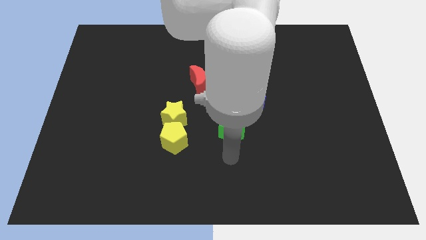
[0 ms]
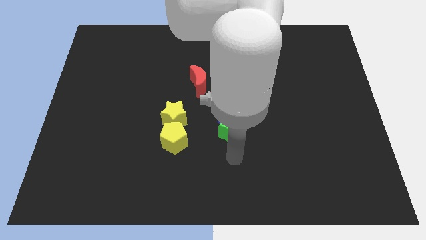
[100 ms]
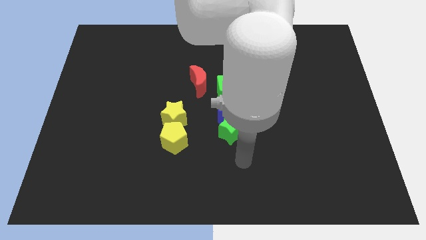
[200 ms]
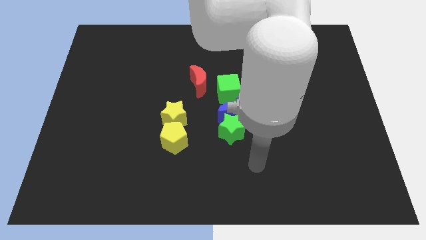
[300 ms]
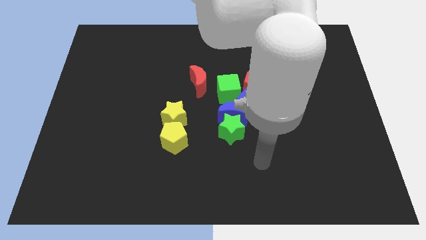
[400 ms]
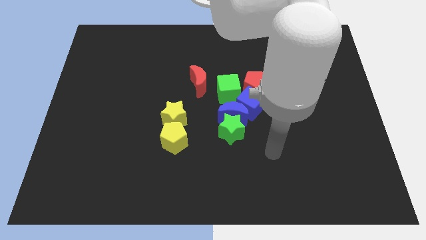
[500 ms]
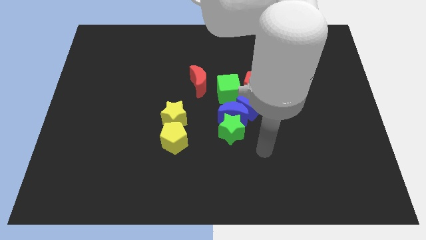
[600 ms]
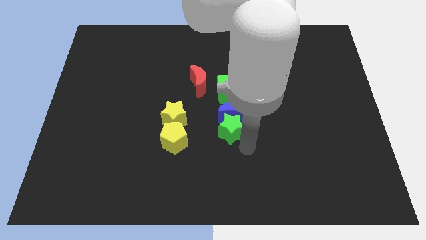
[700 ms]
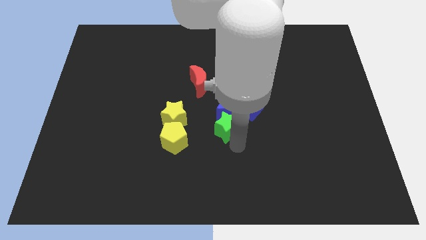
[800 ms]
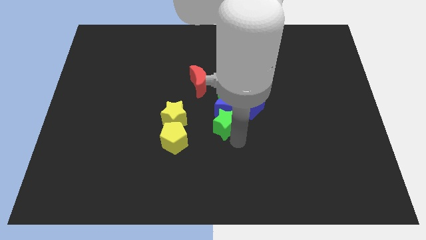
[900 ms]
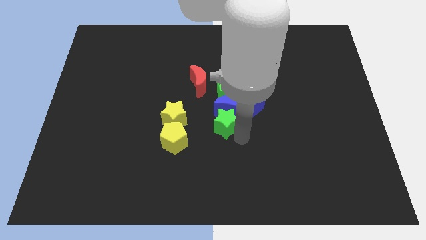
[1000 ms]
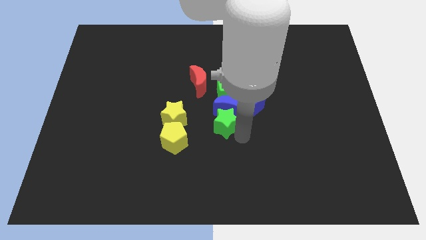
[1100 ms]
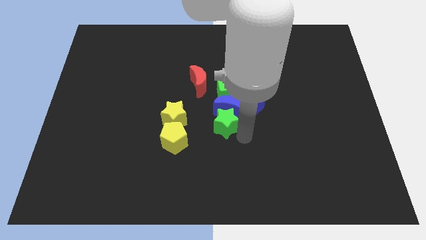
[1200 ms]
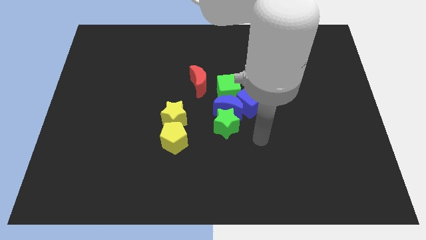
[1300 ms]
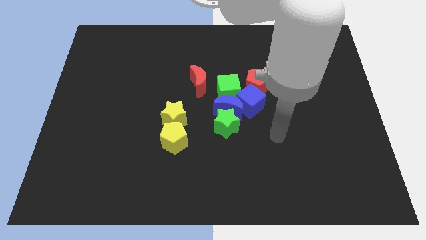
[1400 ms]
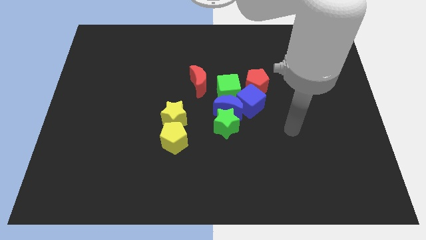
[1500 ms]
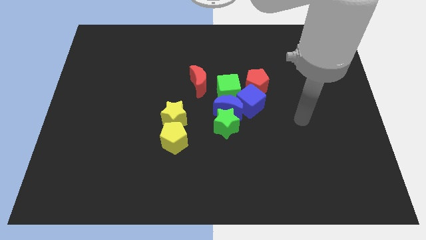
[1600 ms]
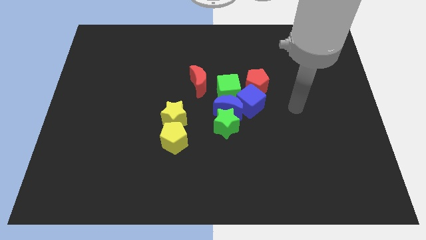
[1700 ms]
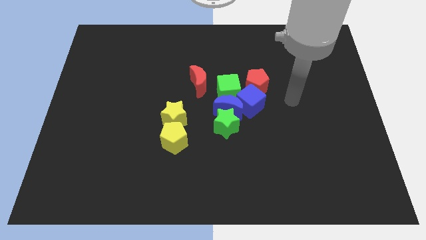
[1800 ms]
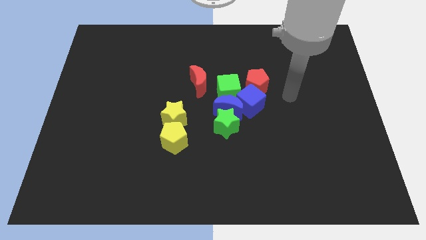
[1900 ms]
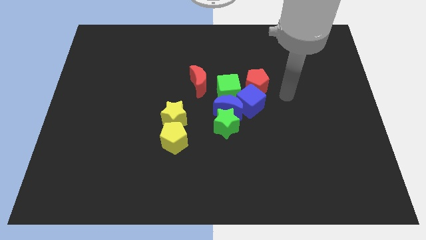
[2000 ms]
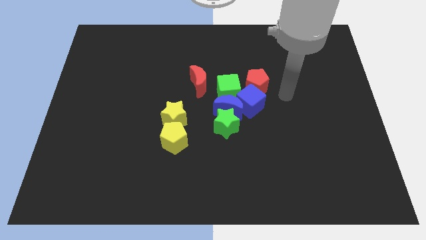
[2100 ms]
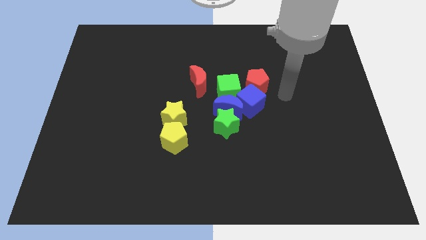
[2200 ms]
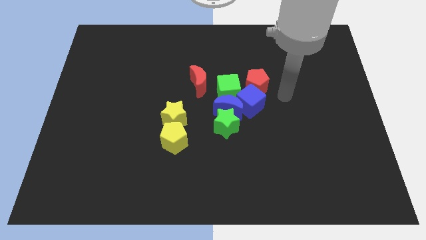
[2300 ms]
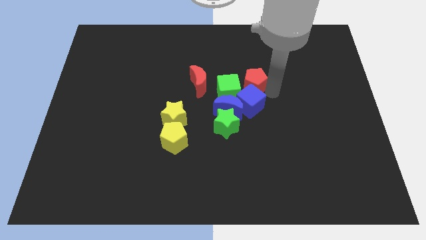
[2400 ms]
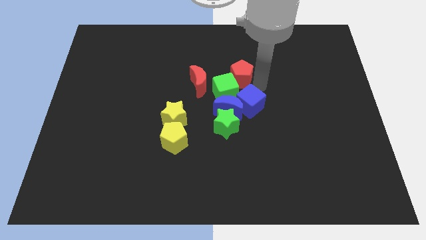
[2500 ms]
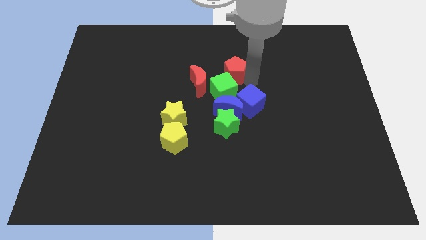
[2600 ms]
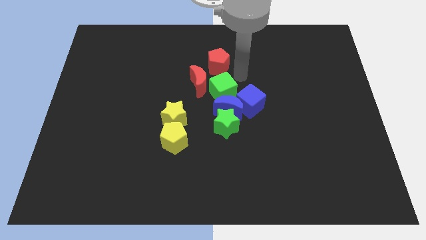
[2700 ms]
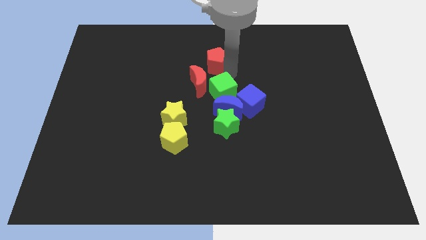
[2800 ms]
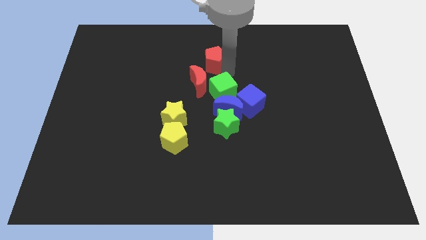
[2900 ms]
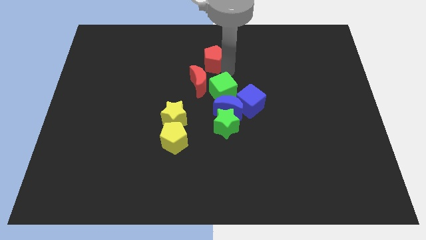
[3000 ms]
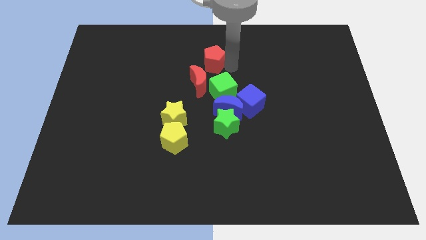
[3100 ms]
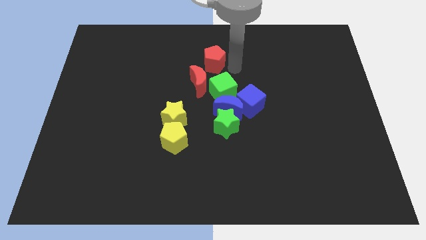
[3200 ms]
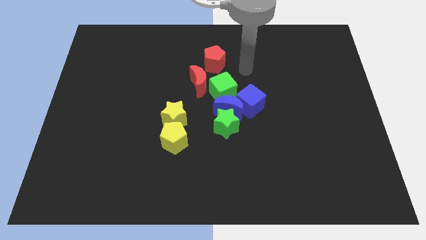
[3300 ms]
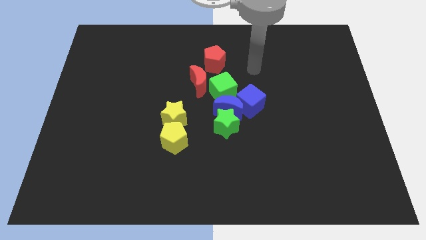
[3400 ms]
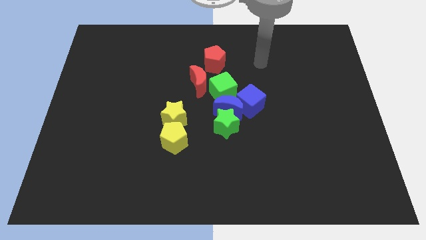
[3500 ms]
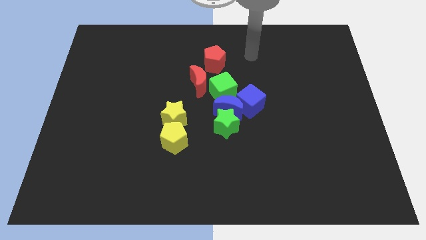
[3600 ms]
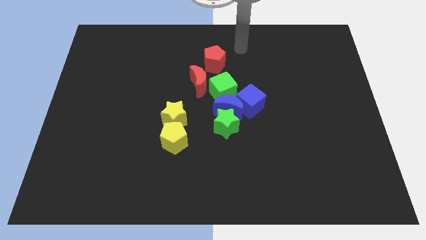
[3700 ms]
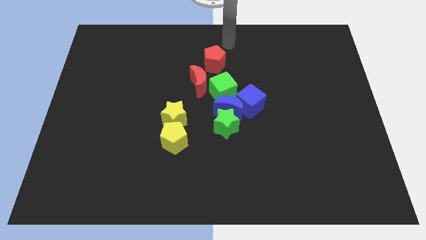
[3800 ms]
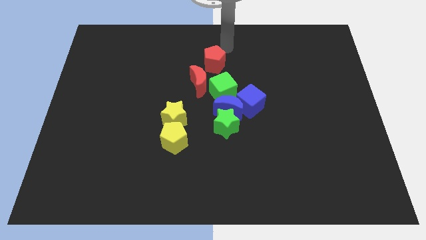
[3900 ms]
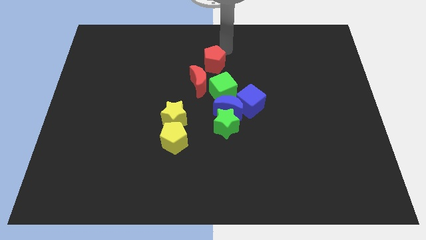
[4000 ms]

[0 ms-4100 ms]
move the red pentagon to the right of the red moon

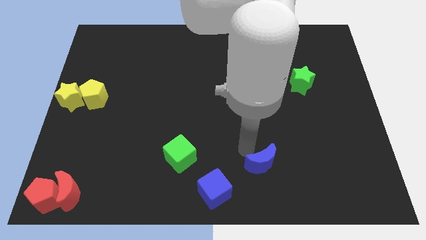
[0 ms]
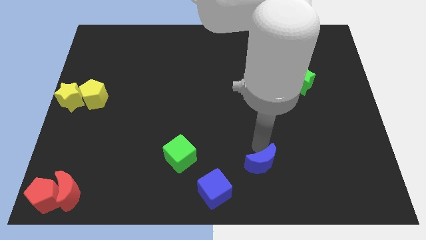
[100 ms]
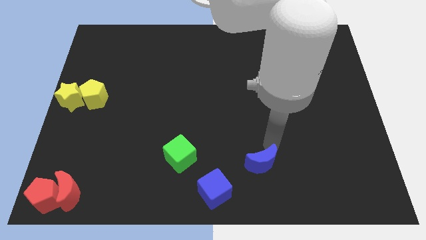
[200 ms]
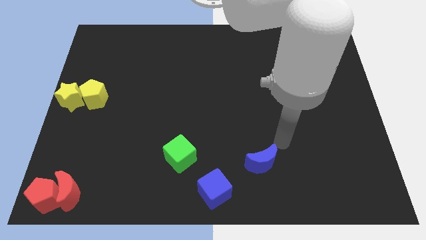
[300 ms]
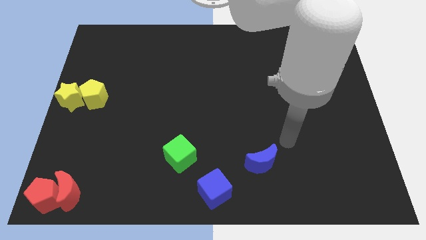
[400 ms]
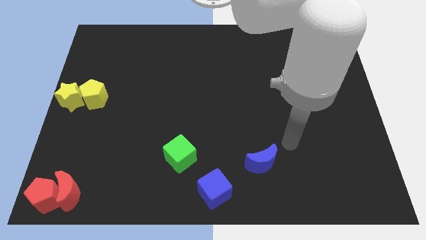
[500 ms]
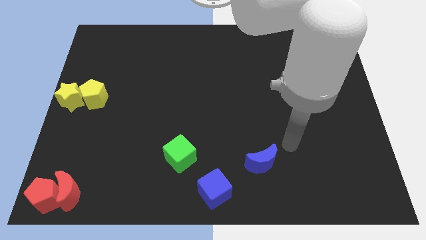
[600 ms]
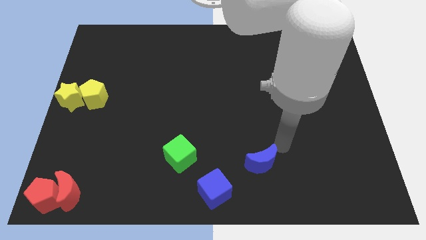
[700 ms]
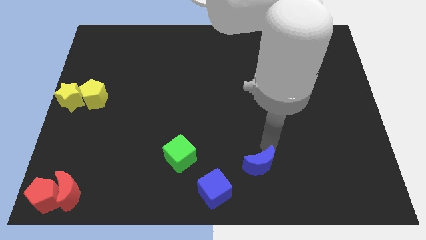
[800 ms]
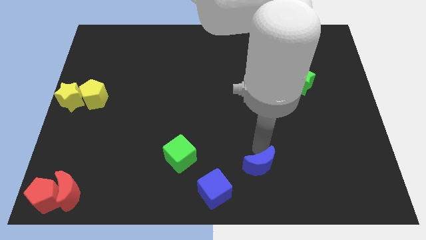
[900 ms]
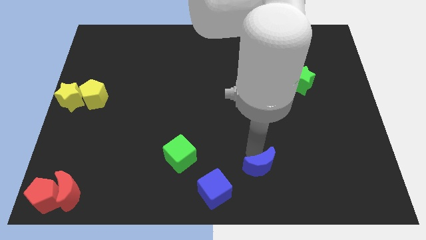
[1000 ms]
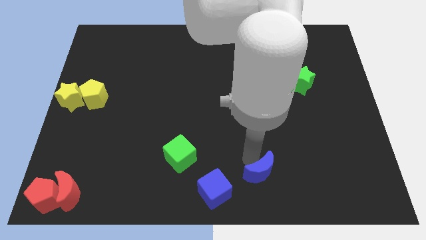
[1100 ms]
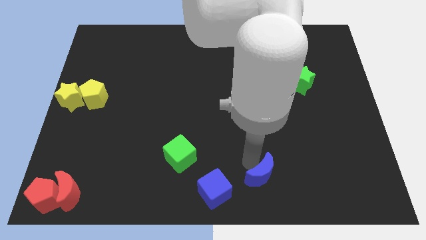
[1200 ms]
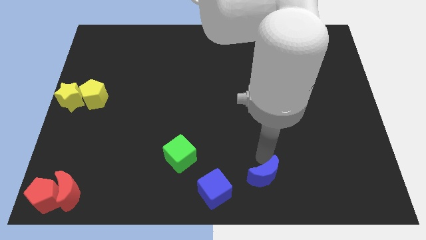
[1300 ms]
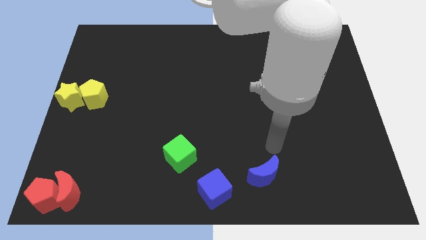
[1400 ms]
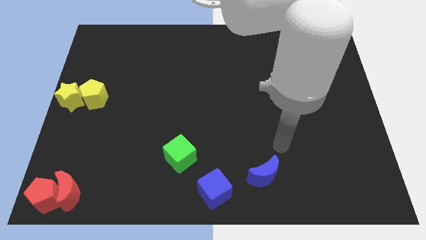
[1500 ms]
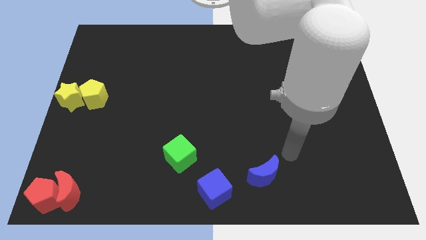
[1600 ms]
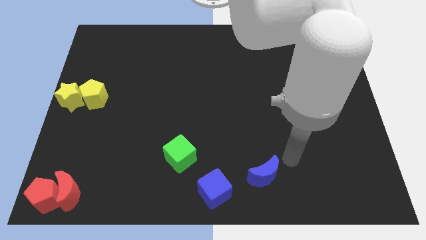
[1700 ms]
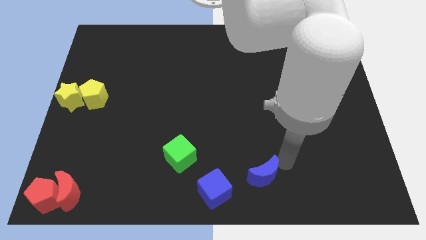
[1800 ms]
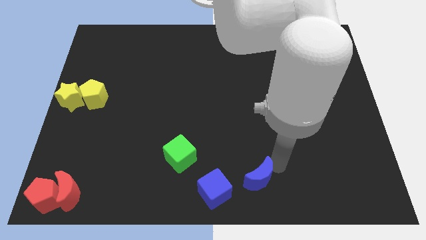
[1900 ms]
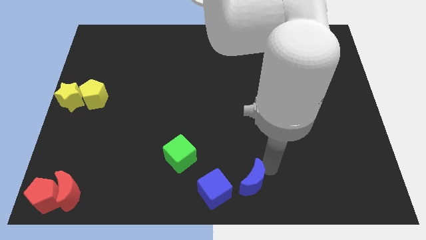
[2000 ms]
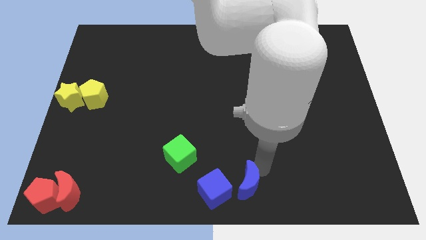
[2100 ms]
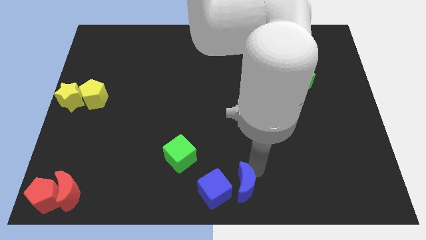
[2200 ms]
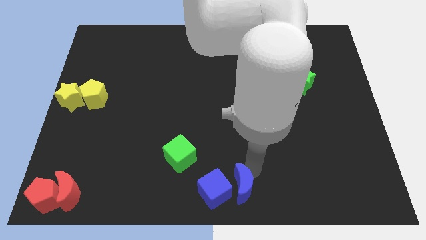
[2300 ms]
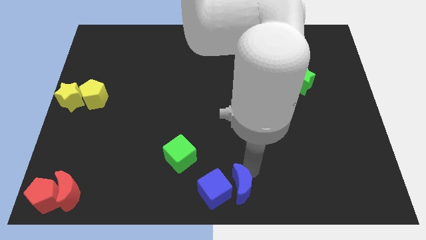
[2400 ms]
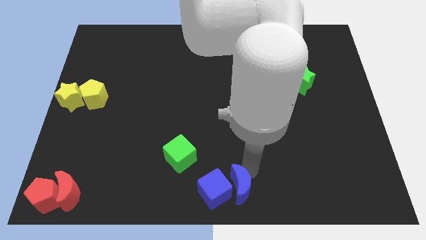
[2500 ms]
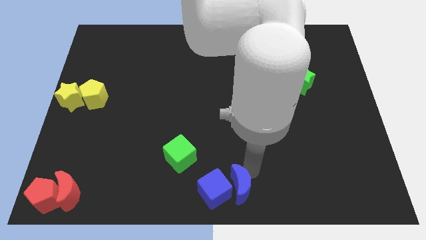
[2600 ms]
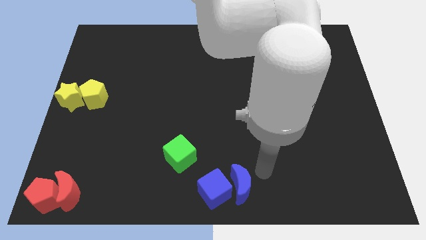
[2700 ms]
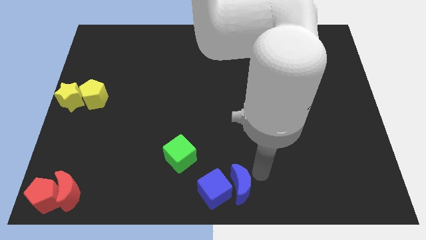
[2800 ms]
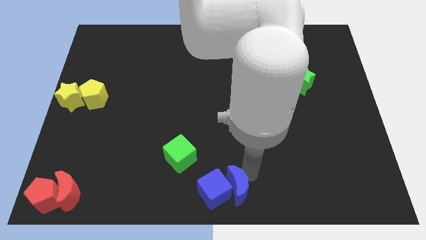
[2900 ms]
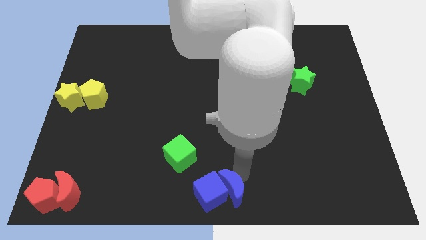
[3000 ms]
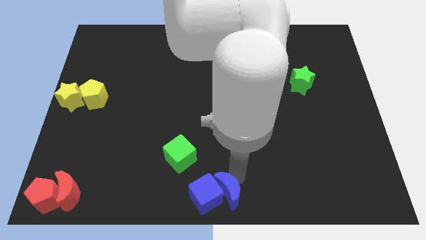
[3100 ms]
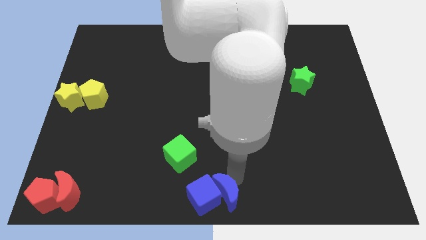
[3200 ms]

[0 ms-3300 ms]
move the blue crescent right to the blue cube

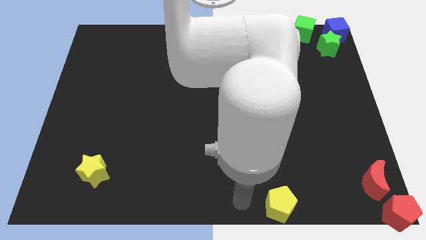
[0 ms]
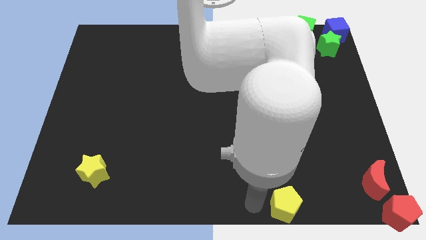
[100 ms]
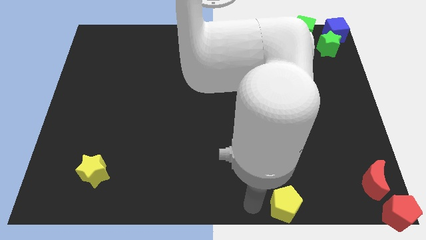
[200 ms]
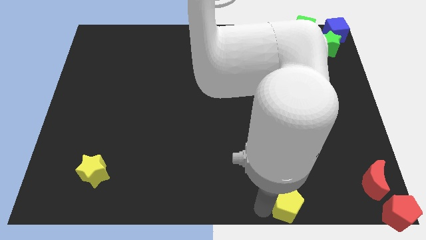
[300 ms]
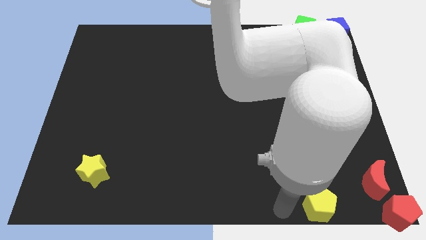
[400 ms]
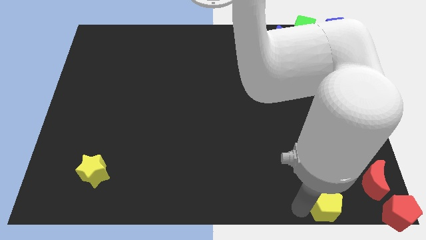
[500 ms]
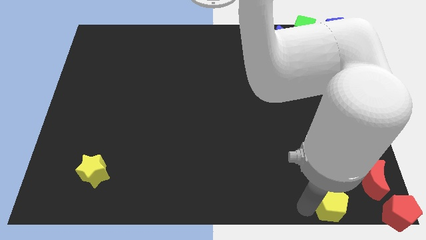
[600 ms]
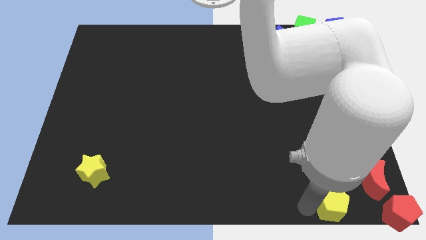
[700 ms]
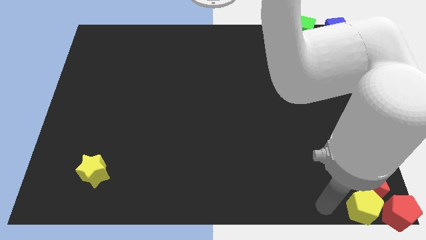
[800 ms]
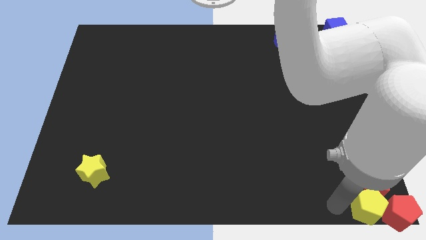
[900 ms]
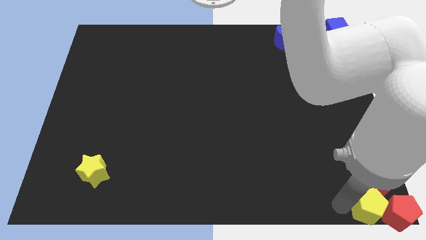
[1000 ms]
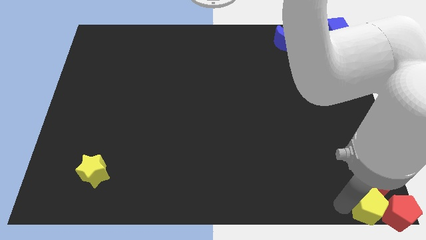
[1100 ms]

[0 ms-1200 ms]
move the yellow pentagon into the red pentagon

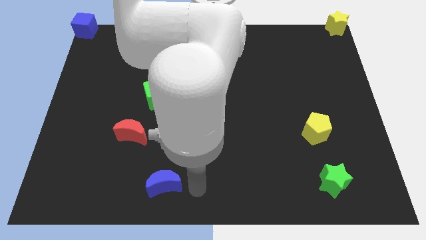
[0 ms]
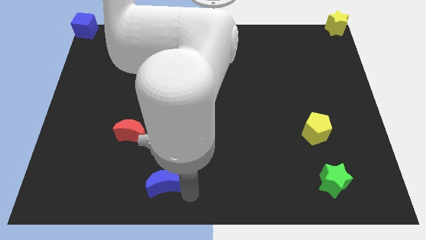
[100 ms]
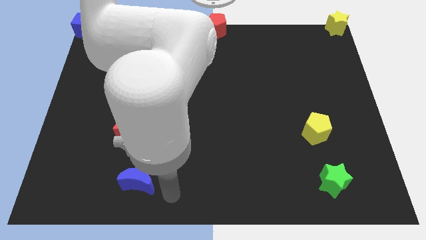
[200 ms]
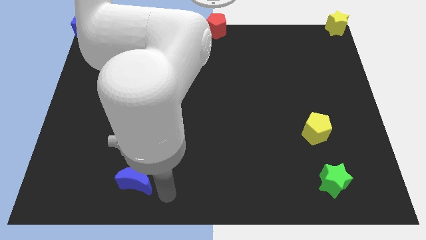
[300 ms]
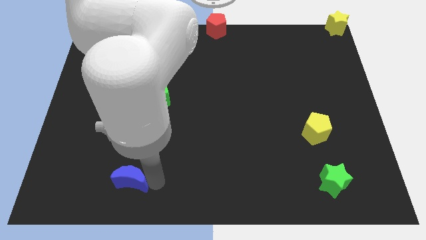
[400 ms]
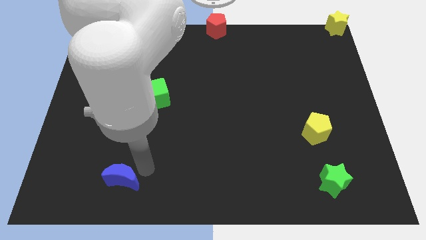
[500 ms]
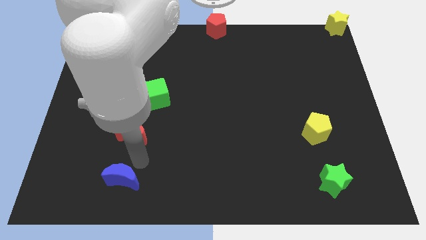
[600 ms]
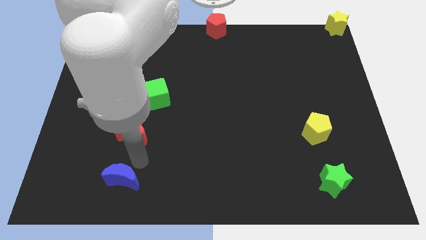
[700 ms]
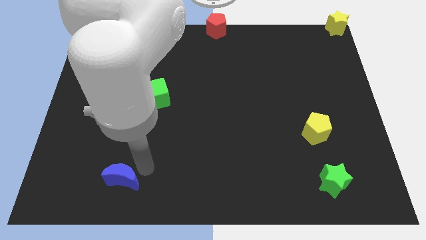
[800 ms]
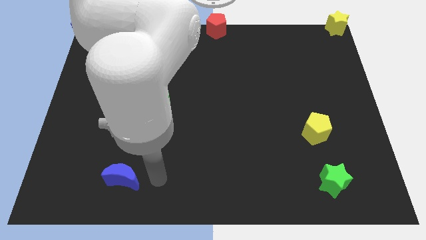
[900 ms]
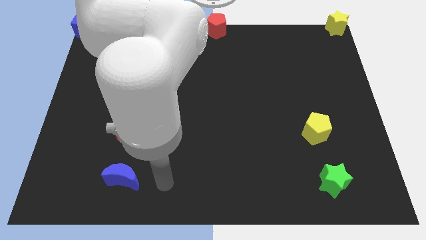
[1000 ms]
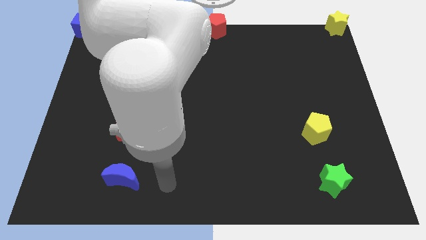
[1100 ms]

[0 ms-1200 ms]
push the blue moon towards the bottom left corner
